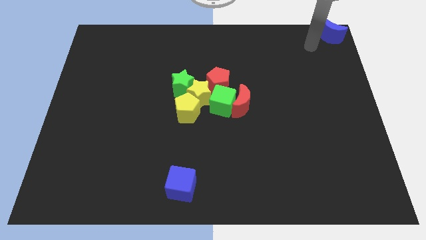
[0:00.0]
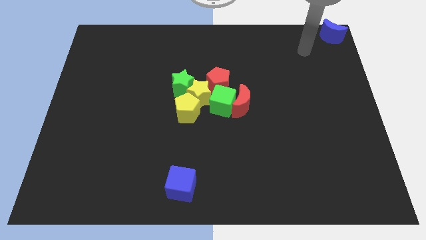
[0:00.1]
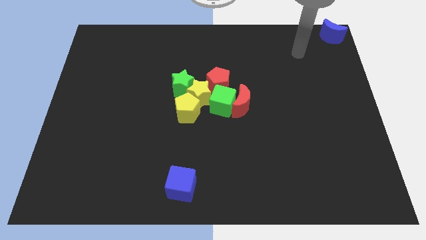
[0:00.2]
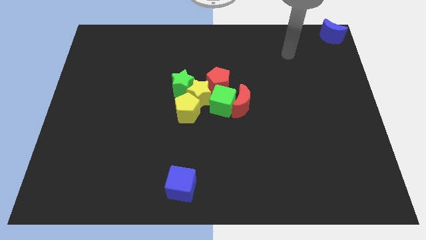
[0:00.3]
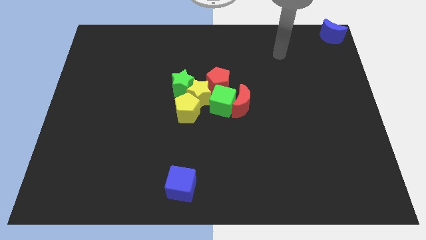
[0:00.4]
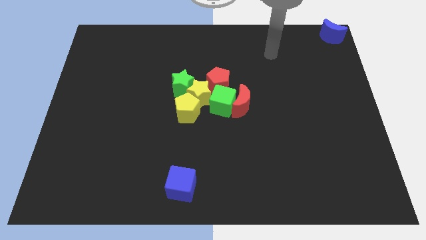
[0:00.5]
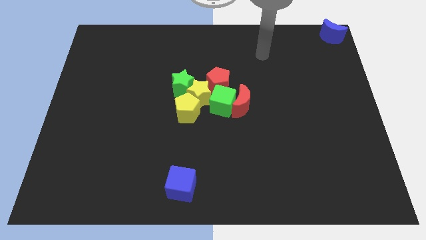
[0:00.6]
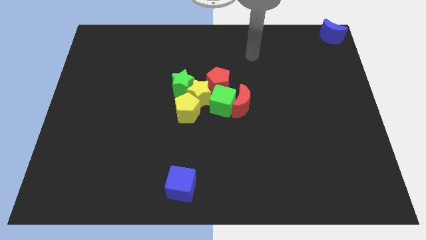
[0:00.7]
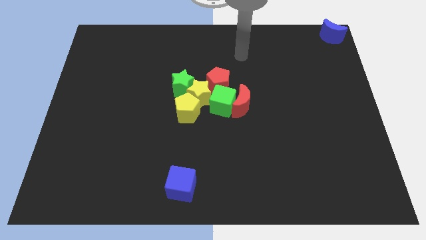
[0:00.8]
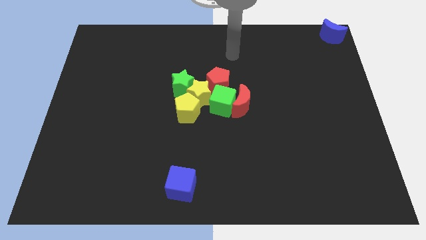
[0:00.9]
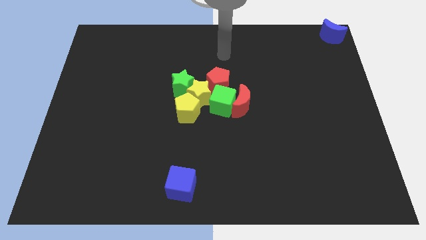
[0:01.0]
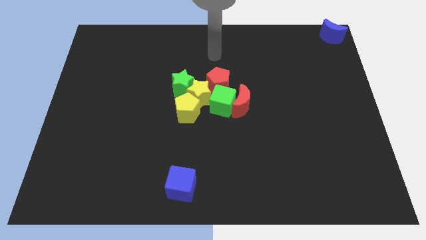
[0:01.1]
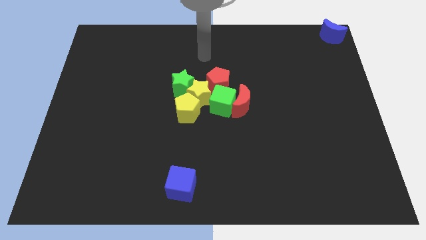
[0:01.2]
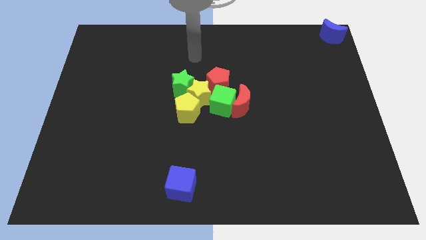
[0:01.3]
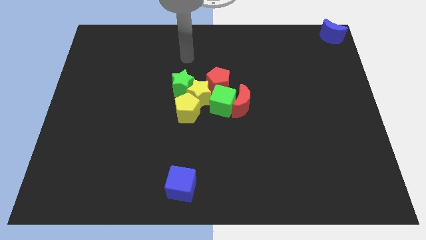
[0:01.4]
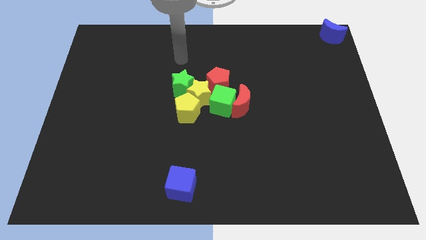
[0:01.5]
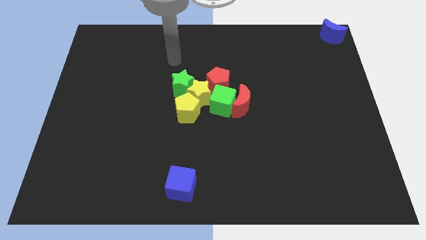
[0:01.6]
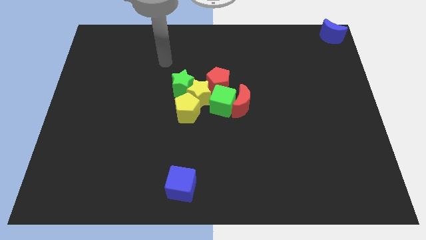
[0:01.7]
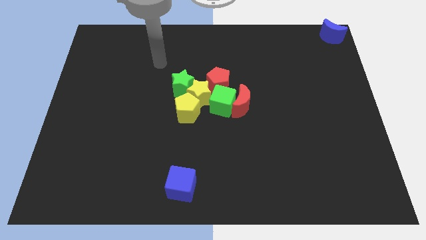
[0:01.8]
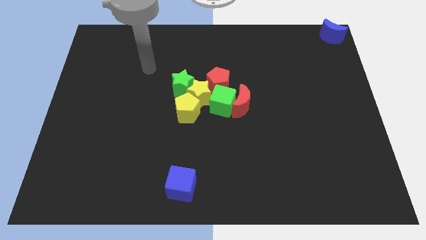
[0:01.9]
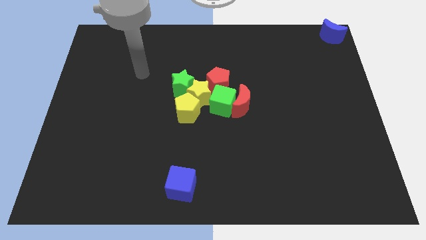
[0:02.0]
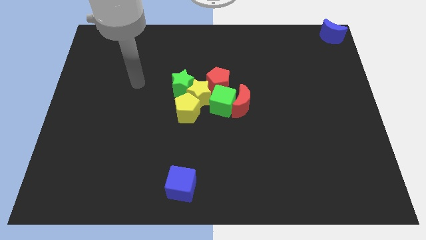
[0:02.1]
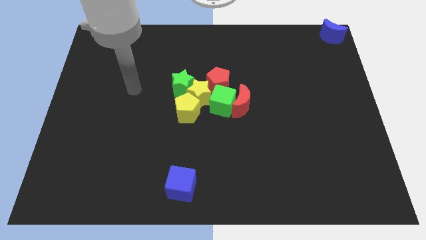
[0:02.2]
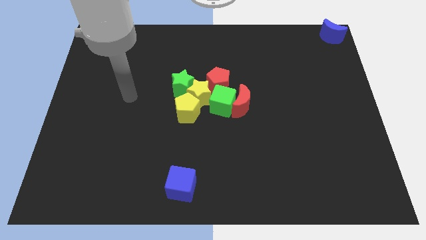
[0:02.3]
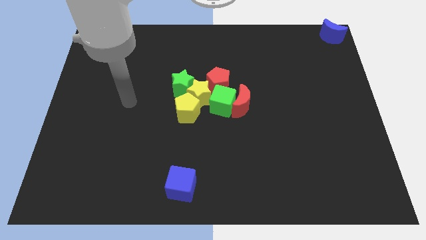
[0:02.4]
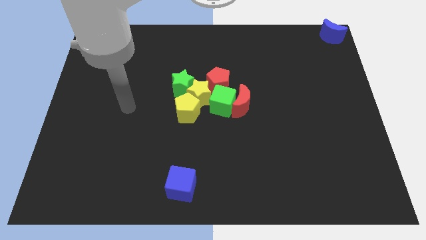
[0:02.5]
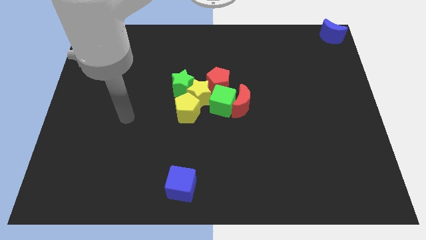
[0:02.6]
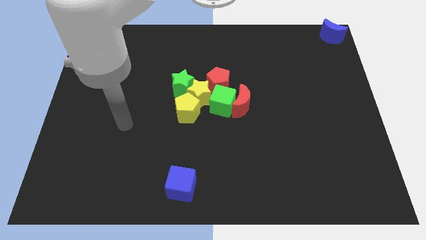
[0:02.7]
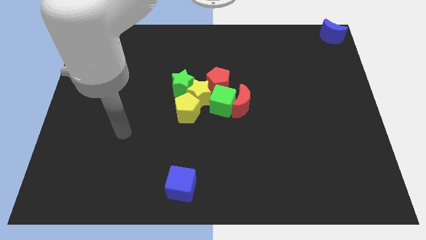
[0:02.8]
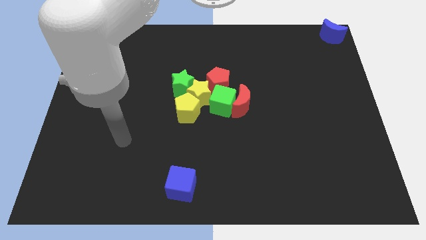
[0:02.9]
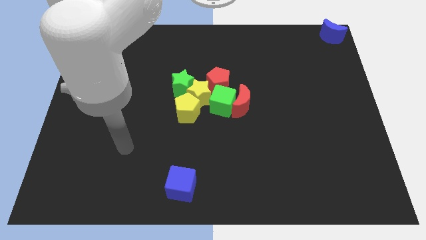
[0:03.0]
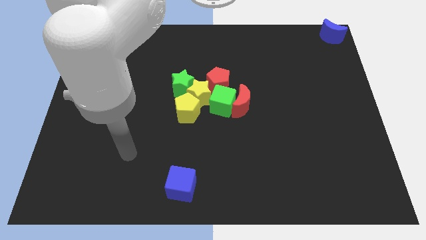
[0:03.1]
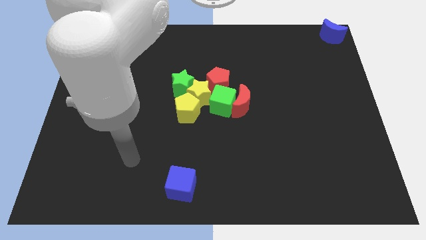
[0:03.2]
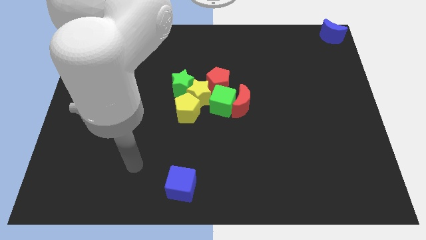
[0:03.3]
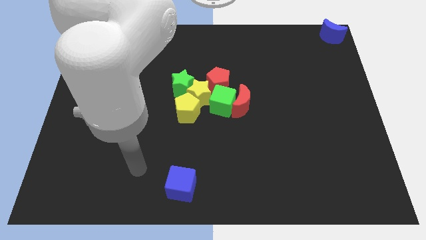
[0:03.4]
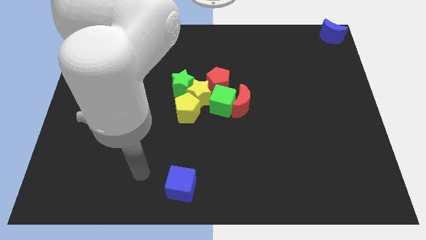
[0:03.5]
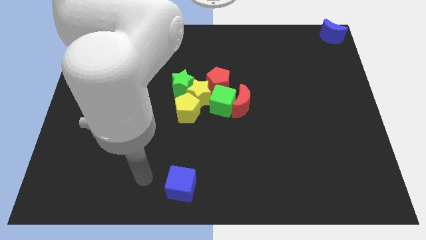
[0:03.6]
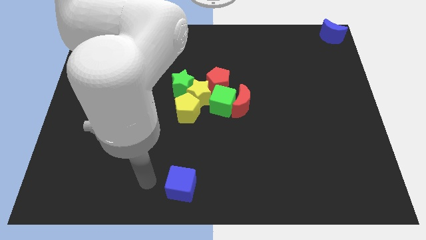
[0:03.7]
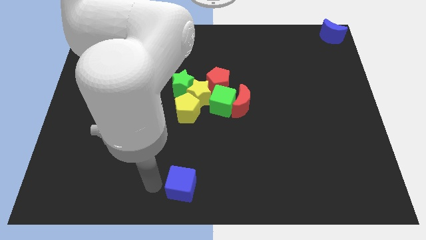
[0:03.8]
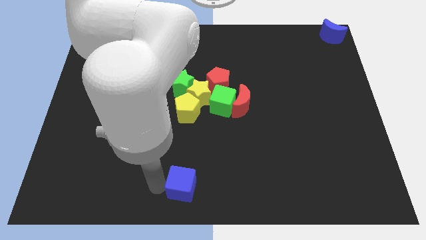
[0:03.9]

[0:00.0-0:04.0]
move your arm left of the blue cube

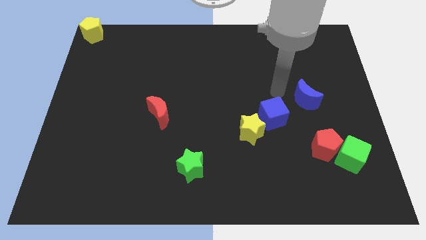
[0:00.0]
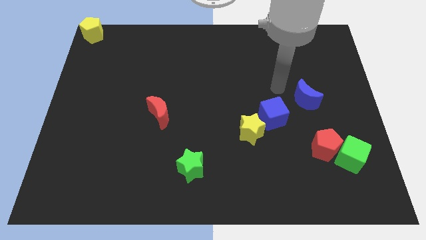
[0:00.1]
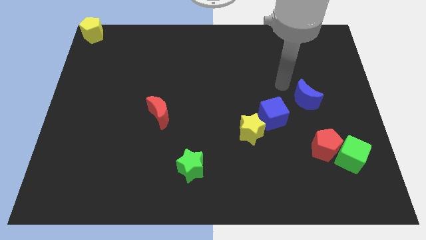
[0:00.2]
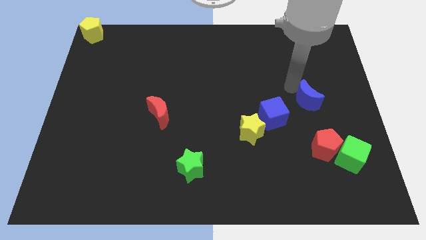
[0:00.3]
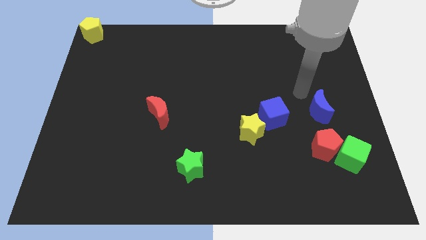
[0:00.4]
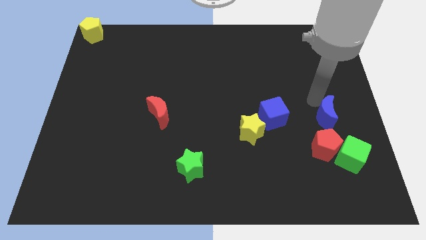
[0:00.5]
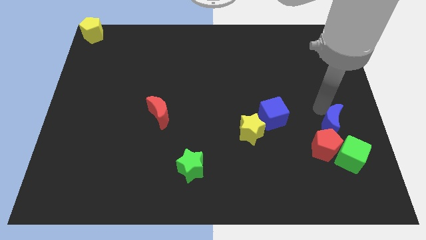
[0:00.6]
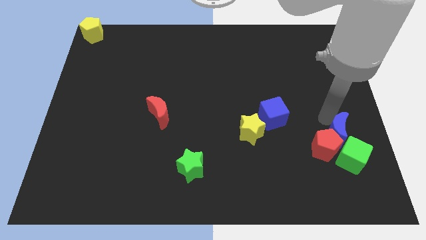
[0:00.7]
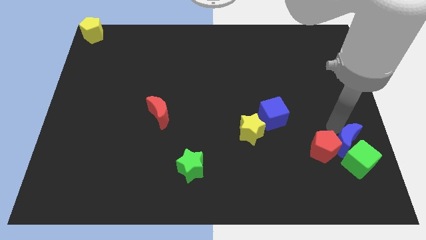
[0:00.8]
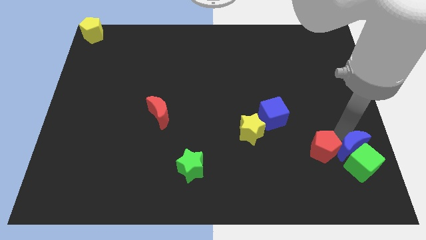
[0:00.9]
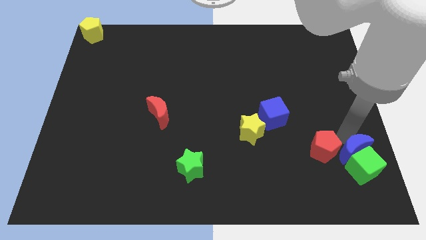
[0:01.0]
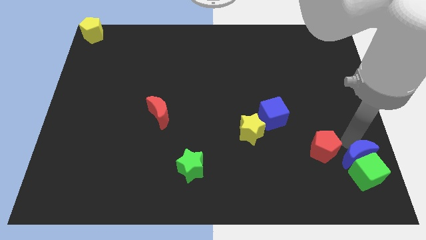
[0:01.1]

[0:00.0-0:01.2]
push the blue crescent into the green cube

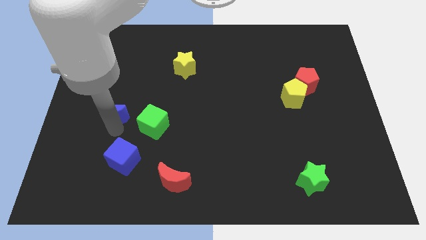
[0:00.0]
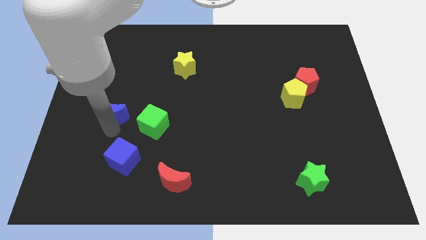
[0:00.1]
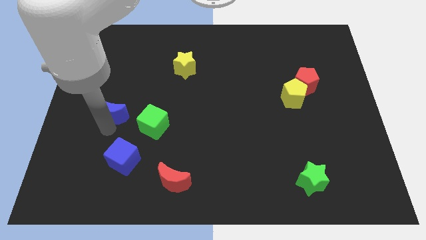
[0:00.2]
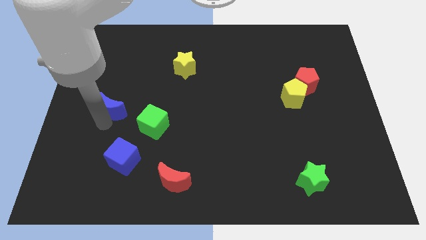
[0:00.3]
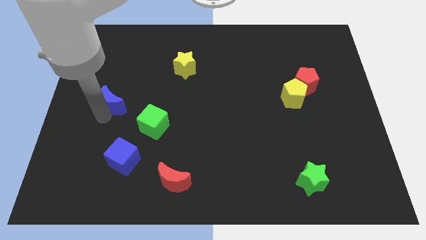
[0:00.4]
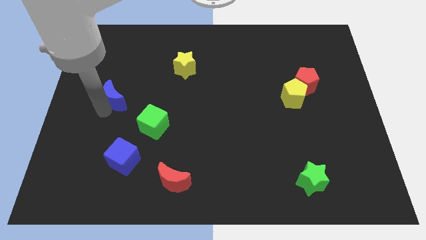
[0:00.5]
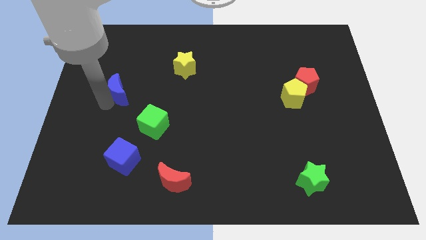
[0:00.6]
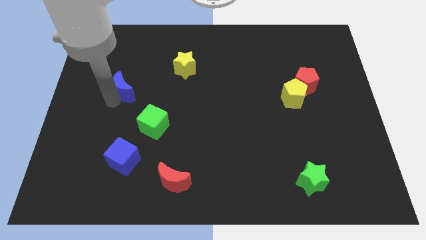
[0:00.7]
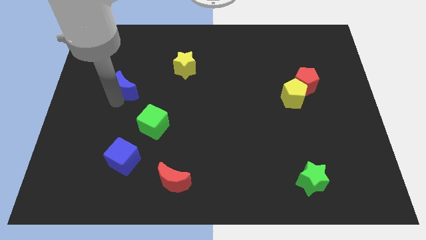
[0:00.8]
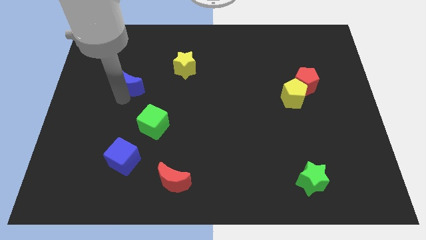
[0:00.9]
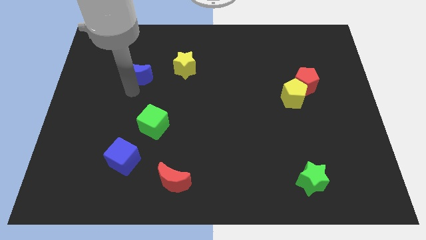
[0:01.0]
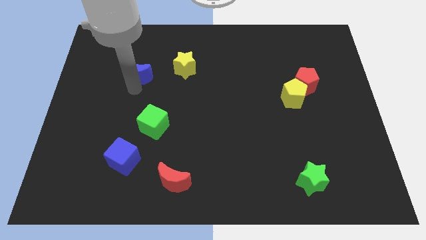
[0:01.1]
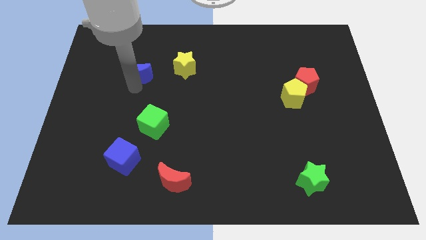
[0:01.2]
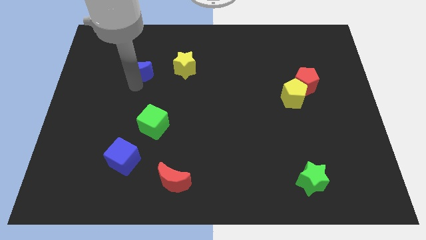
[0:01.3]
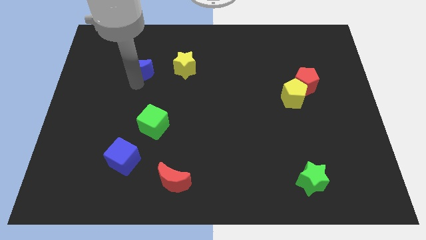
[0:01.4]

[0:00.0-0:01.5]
place blue moon to the top of green cube

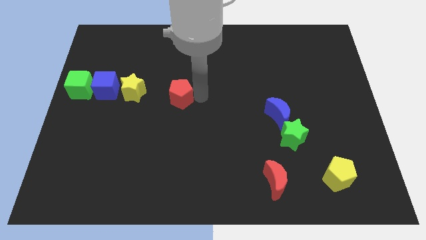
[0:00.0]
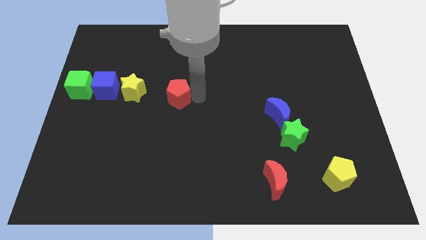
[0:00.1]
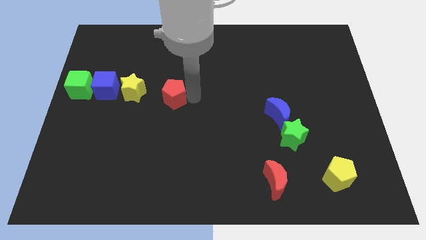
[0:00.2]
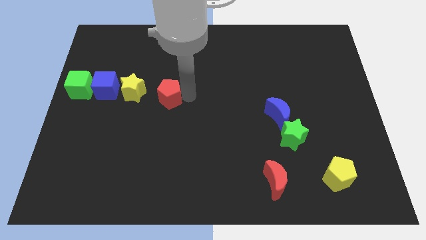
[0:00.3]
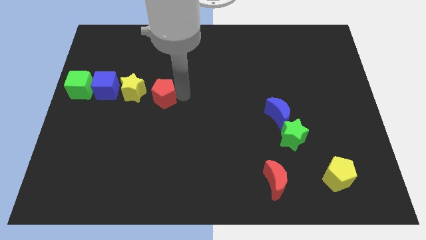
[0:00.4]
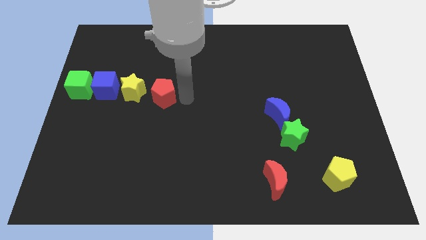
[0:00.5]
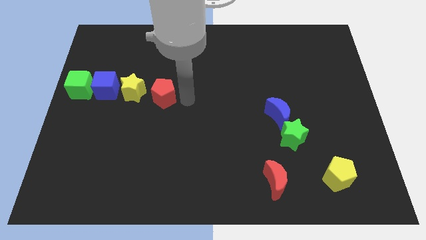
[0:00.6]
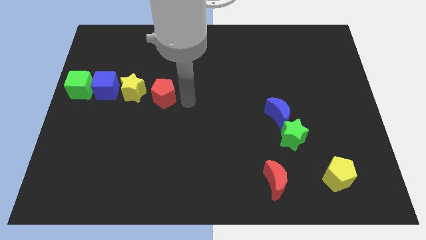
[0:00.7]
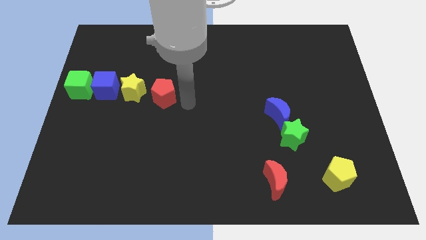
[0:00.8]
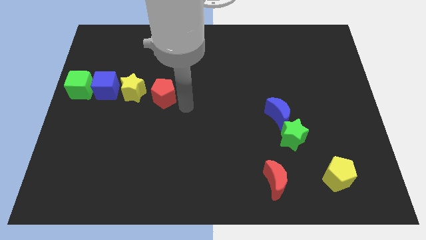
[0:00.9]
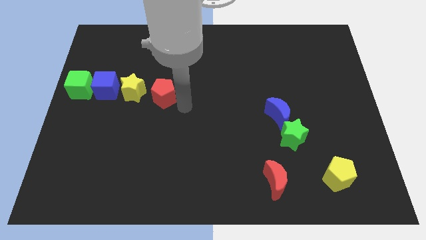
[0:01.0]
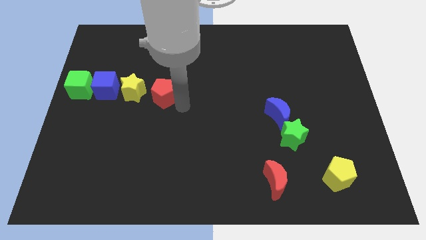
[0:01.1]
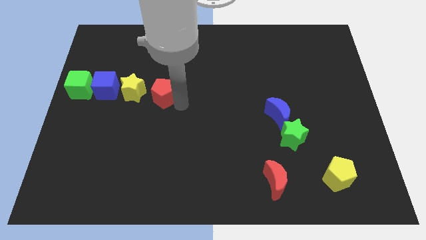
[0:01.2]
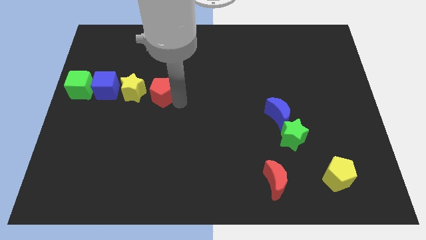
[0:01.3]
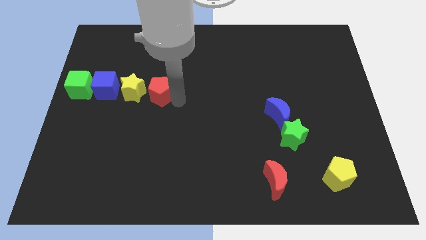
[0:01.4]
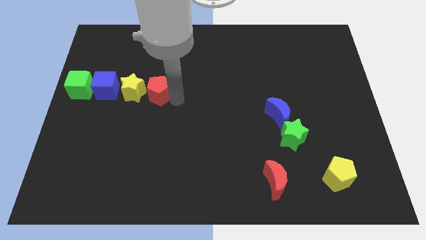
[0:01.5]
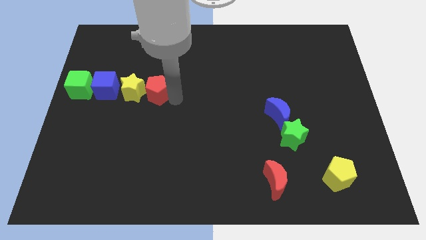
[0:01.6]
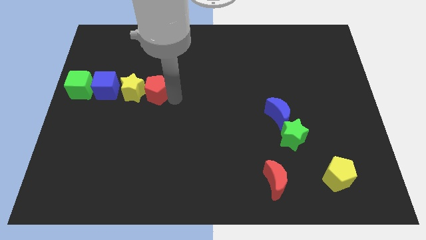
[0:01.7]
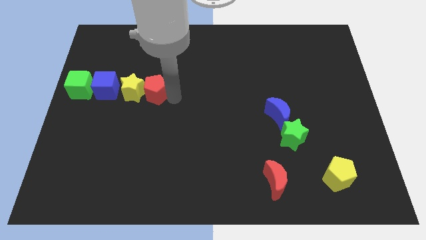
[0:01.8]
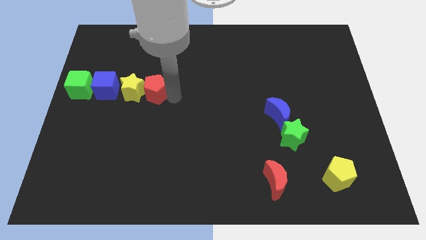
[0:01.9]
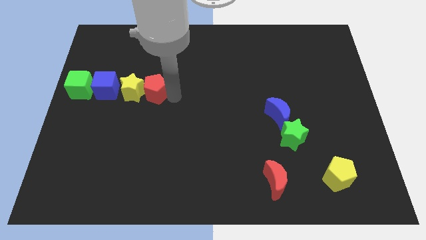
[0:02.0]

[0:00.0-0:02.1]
place red pentagon near yellow star

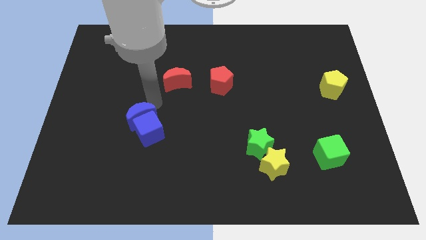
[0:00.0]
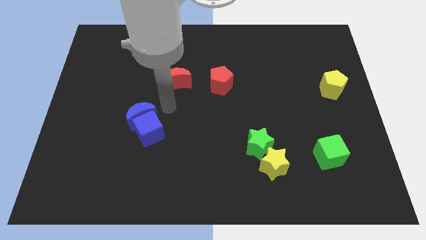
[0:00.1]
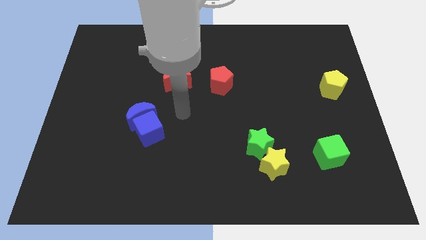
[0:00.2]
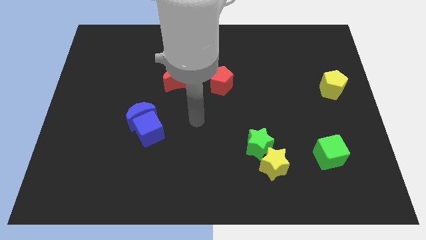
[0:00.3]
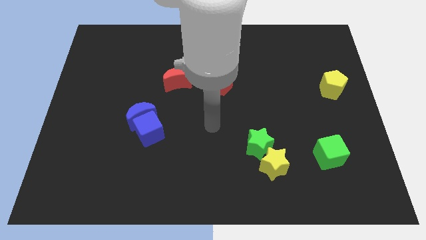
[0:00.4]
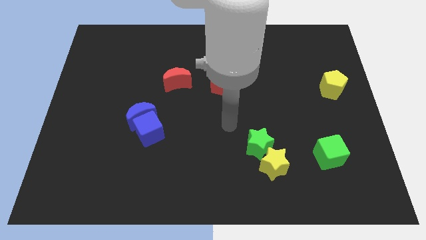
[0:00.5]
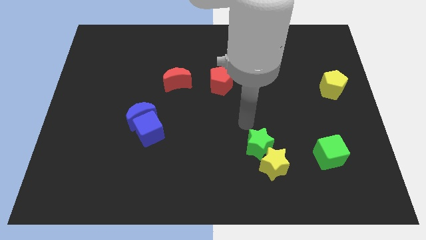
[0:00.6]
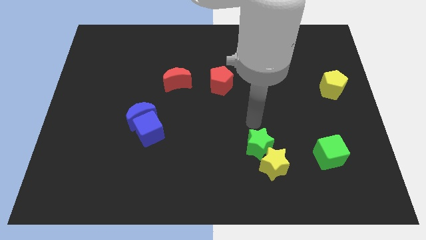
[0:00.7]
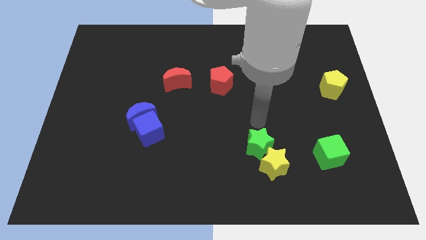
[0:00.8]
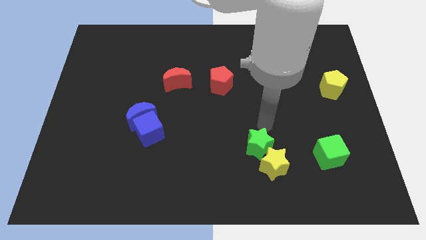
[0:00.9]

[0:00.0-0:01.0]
move the arm around the green star
